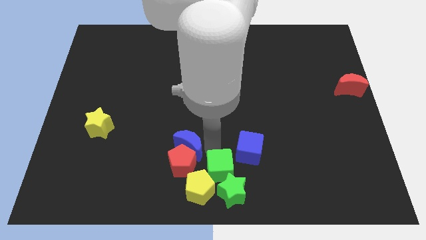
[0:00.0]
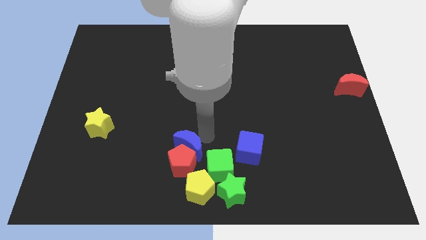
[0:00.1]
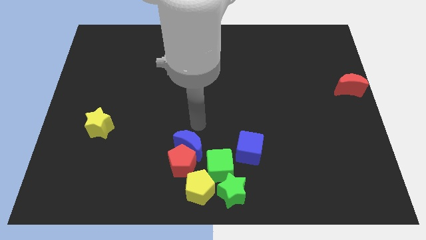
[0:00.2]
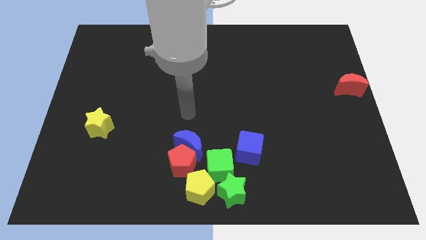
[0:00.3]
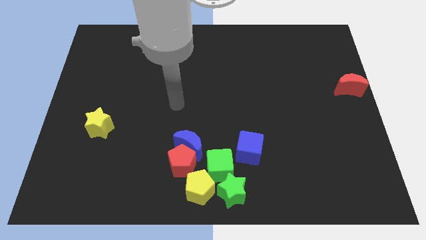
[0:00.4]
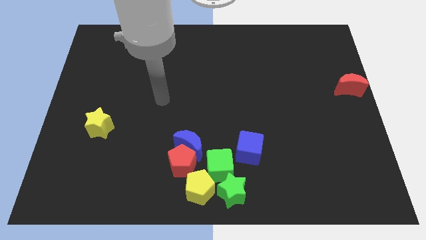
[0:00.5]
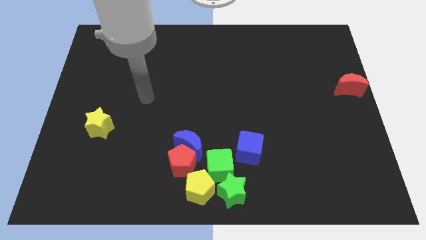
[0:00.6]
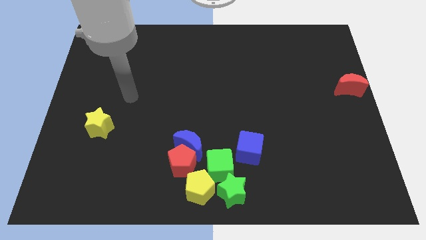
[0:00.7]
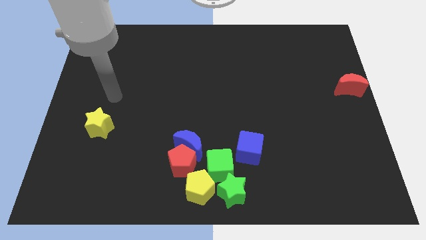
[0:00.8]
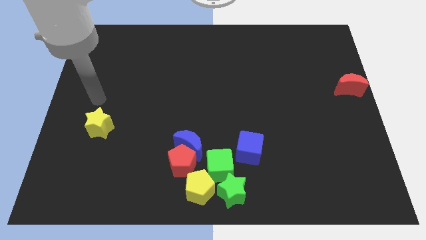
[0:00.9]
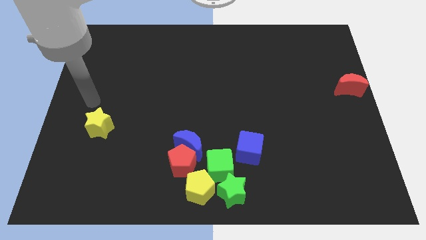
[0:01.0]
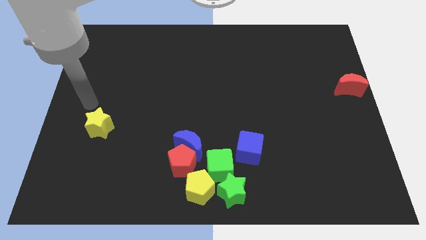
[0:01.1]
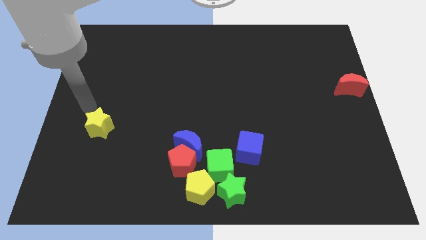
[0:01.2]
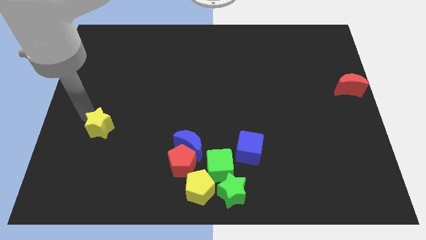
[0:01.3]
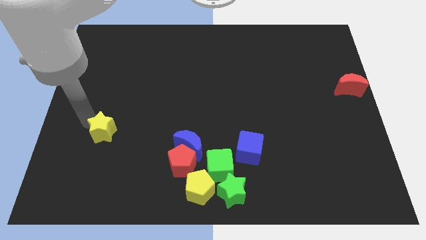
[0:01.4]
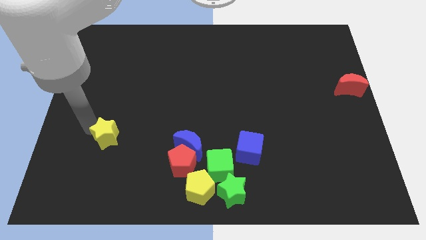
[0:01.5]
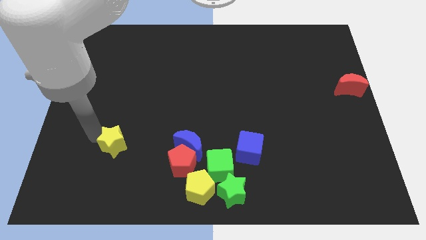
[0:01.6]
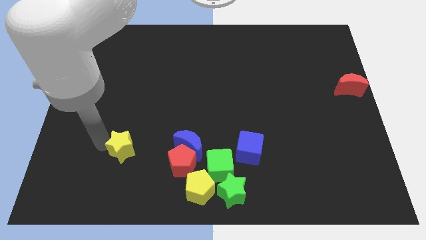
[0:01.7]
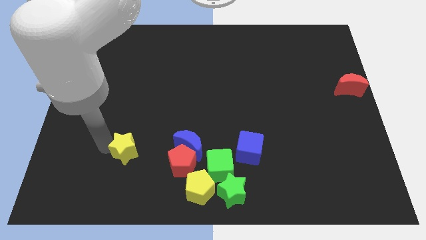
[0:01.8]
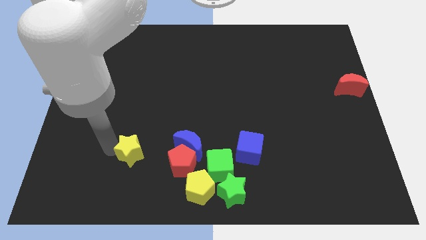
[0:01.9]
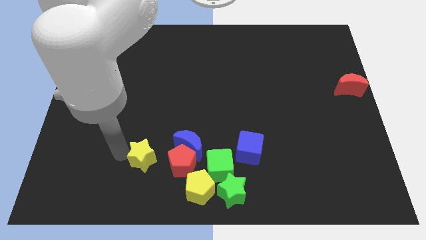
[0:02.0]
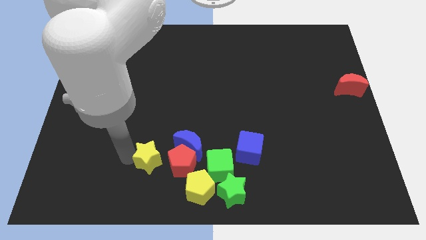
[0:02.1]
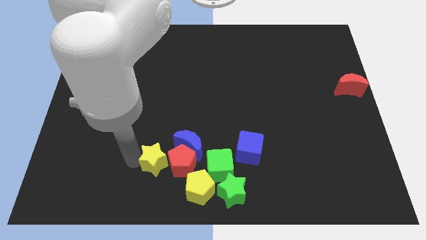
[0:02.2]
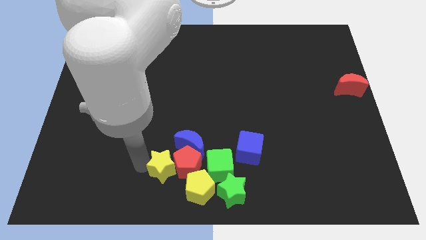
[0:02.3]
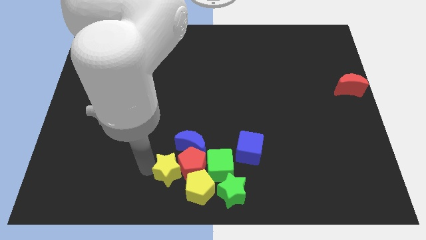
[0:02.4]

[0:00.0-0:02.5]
push the yellow star to the left of the red pentagon

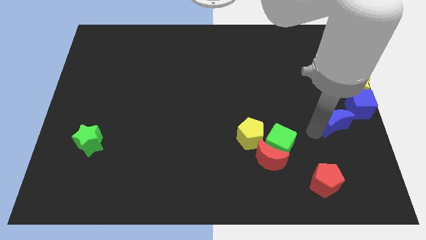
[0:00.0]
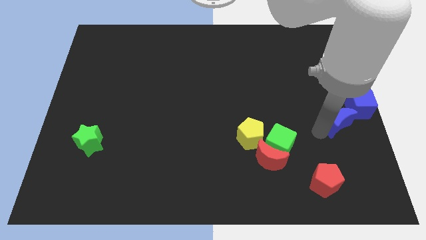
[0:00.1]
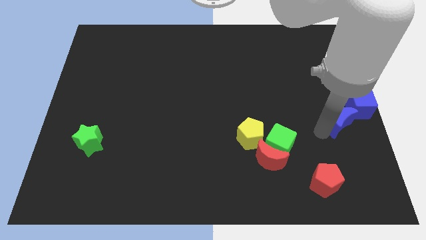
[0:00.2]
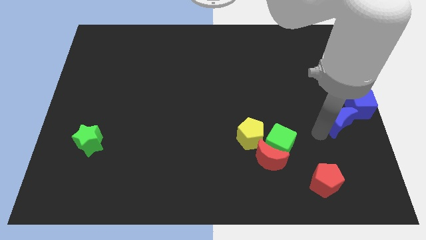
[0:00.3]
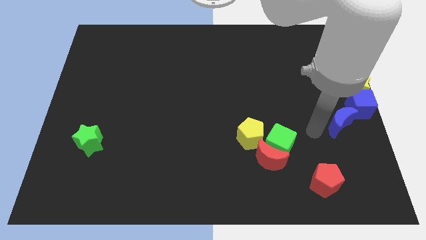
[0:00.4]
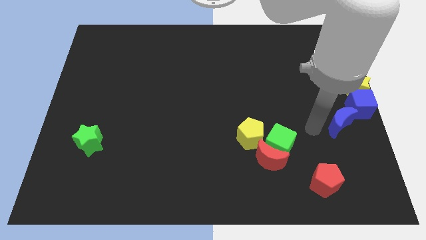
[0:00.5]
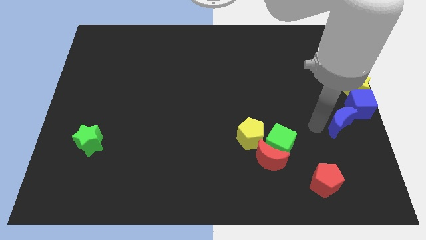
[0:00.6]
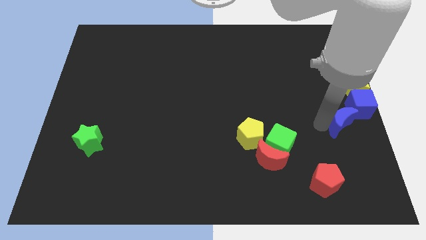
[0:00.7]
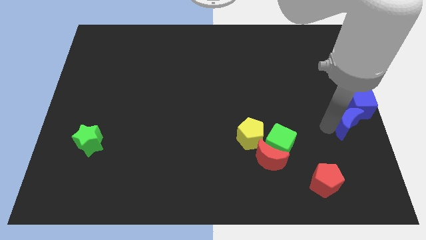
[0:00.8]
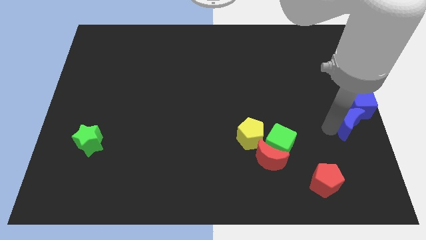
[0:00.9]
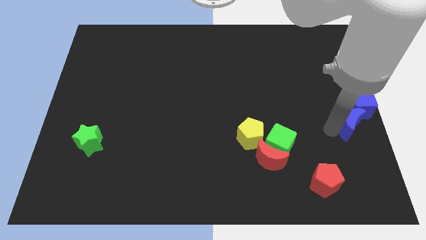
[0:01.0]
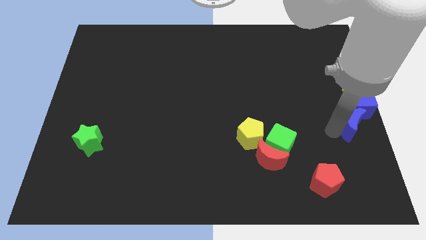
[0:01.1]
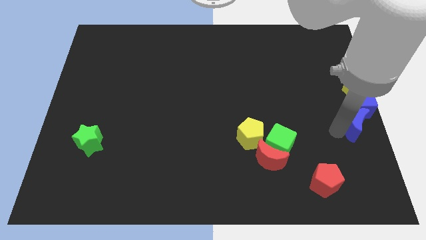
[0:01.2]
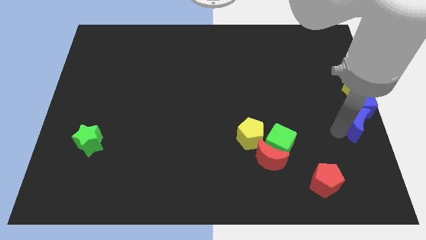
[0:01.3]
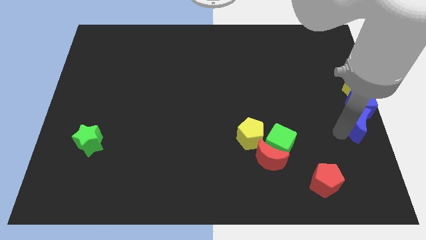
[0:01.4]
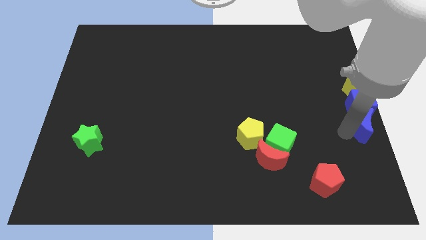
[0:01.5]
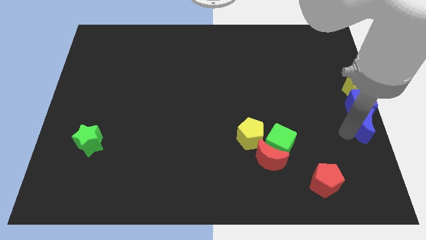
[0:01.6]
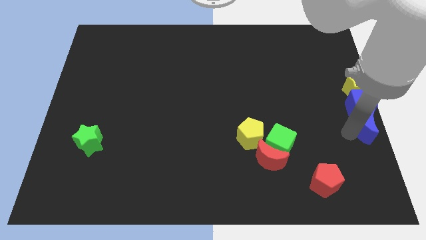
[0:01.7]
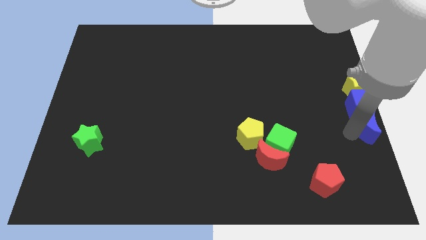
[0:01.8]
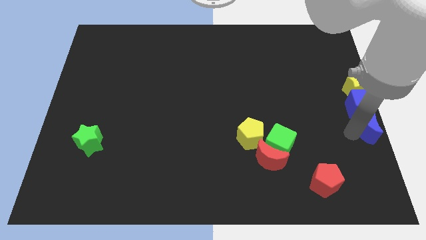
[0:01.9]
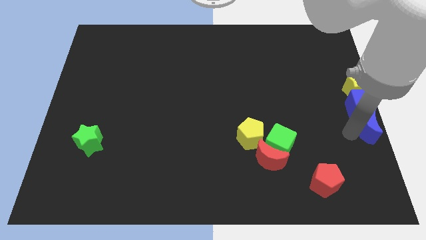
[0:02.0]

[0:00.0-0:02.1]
place the blue crescent below the blue cube

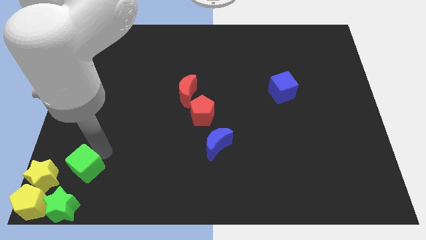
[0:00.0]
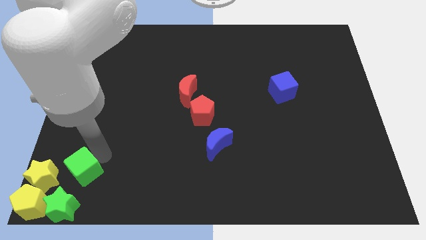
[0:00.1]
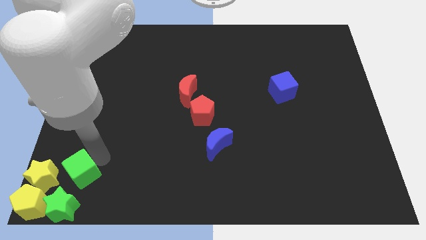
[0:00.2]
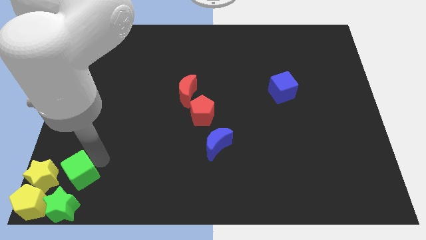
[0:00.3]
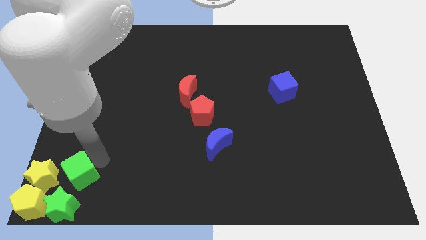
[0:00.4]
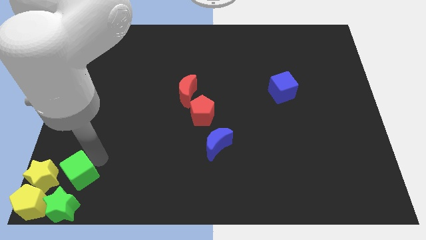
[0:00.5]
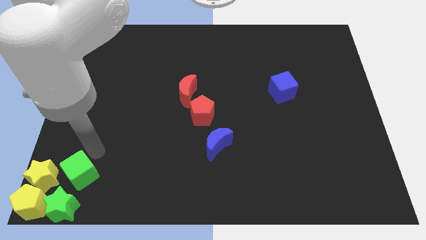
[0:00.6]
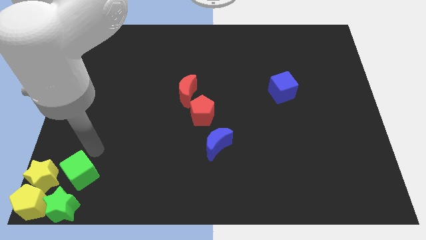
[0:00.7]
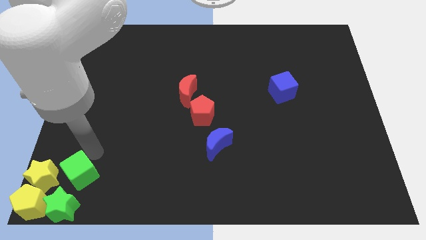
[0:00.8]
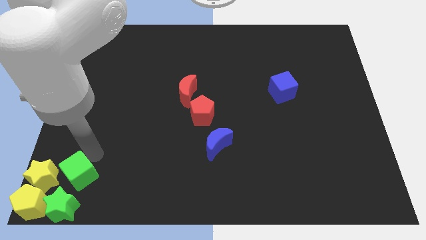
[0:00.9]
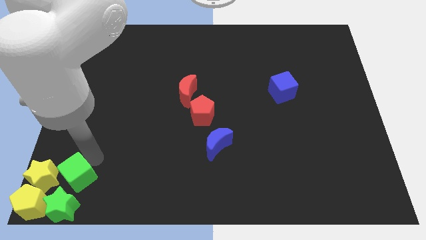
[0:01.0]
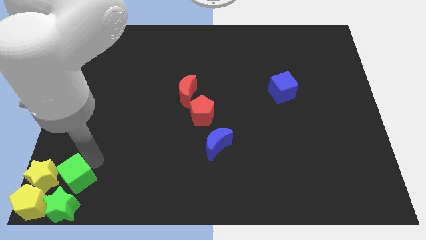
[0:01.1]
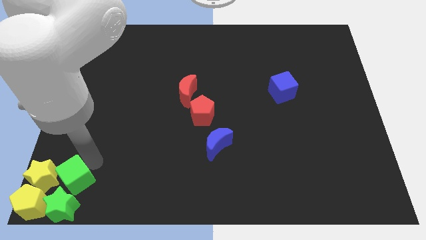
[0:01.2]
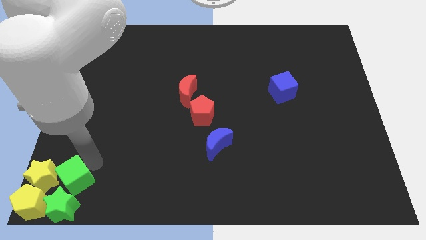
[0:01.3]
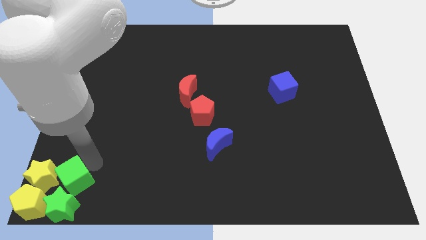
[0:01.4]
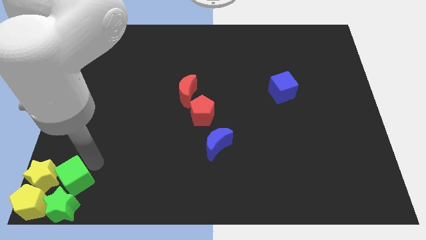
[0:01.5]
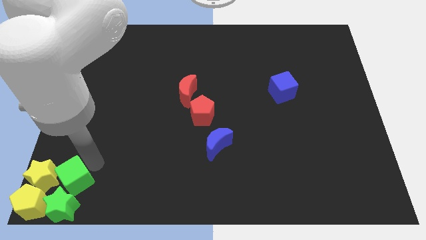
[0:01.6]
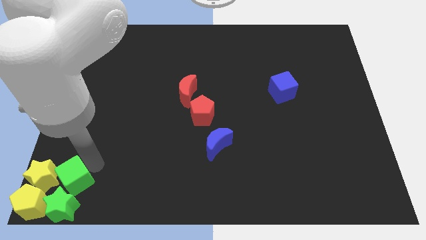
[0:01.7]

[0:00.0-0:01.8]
slightly drag the green cube into the group of blocks

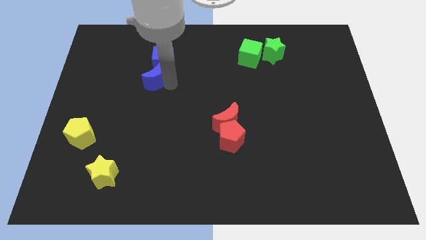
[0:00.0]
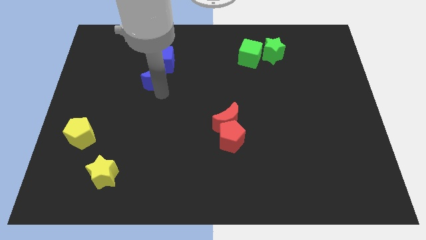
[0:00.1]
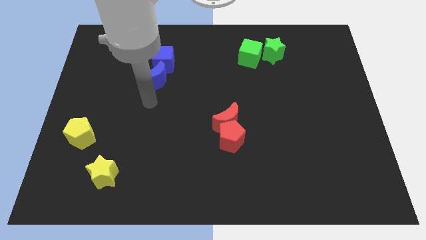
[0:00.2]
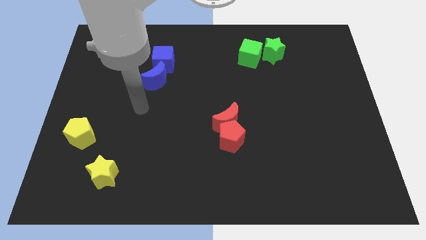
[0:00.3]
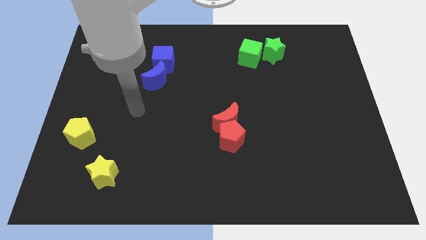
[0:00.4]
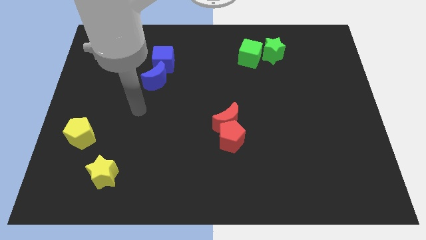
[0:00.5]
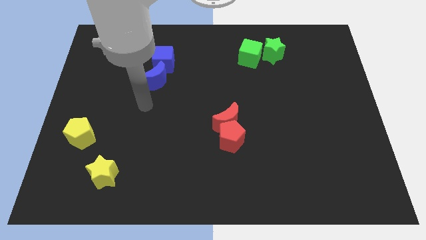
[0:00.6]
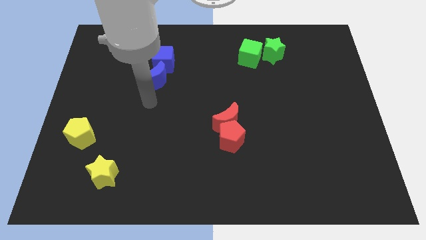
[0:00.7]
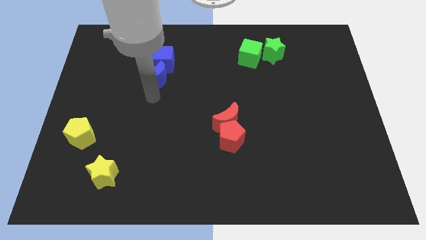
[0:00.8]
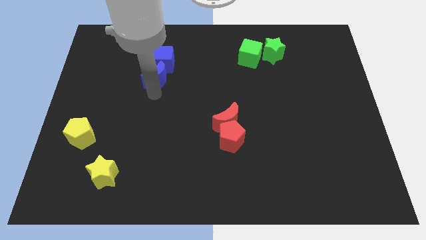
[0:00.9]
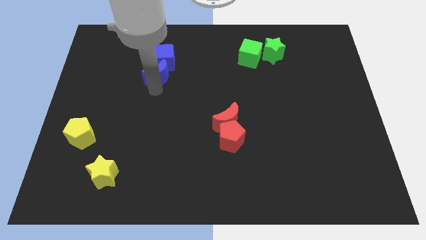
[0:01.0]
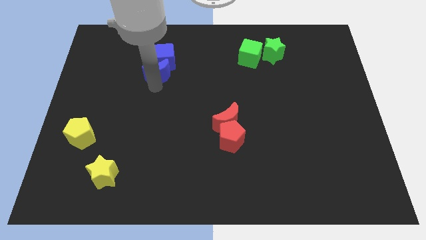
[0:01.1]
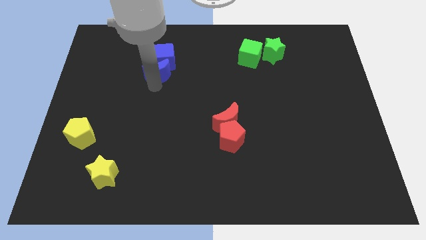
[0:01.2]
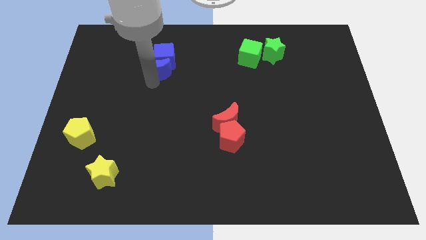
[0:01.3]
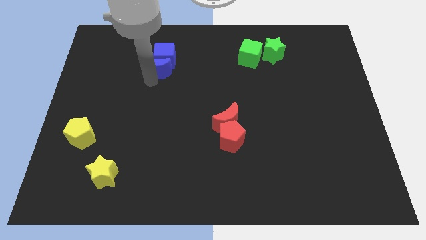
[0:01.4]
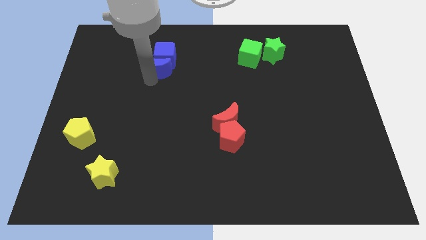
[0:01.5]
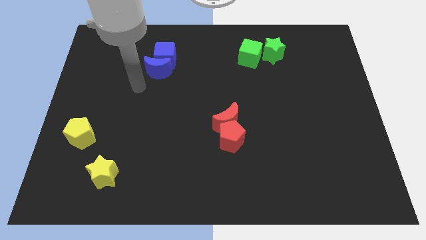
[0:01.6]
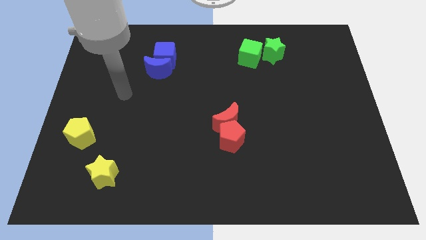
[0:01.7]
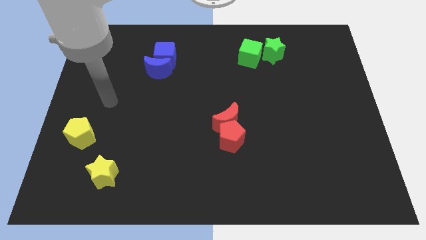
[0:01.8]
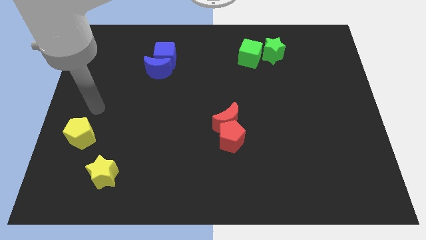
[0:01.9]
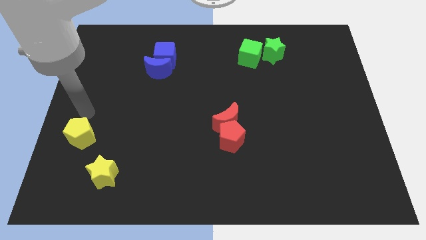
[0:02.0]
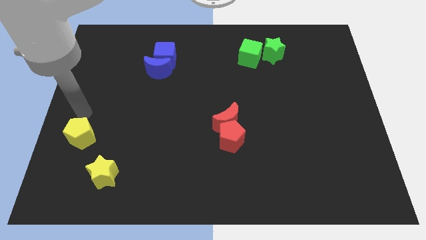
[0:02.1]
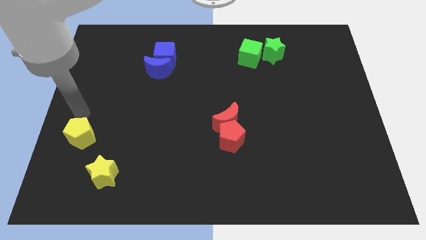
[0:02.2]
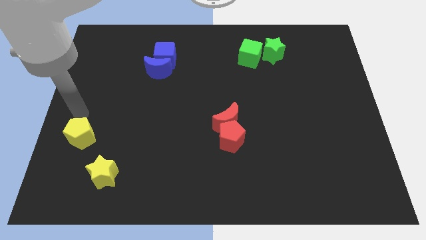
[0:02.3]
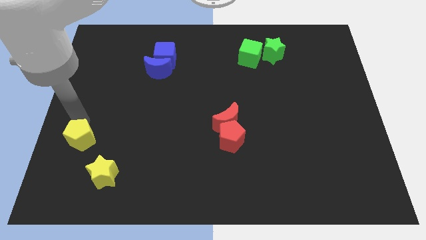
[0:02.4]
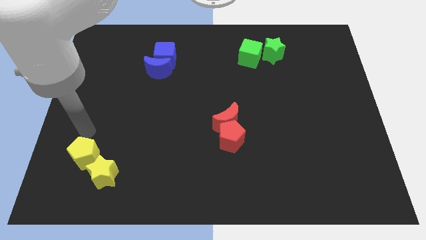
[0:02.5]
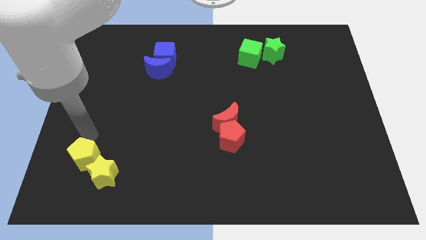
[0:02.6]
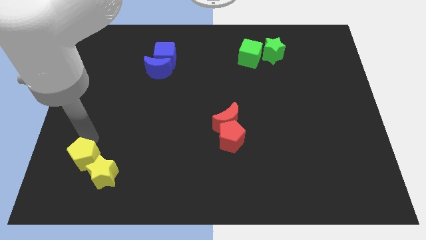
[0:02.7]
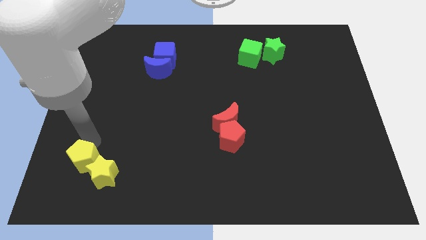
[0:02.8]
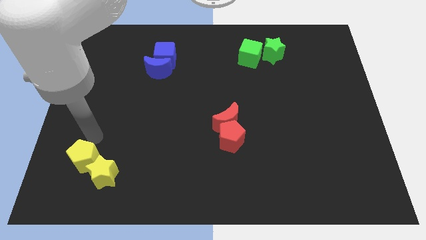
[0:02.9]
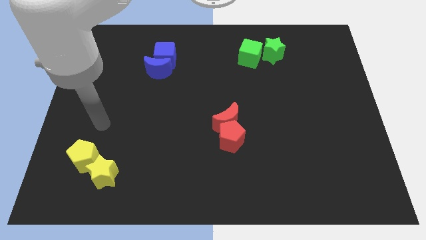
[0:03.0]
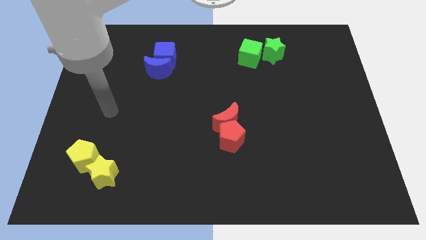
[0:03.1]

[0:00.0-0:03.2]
push the blue moon into the blue cube
